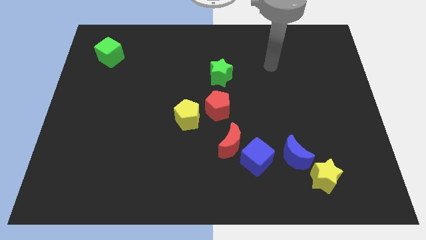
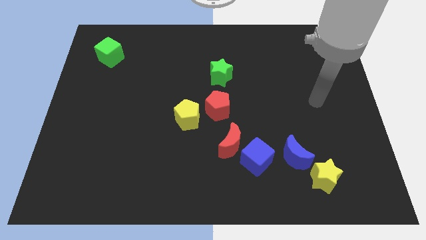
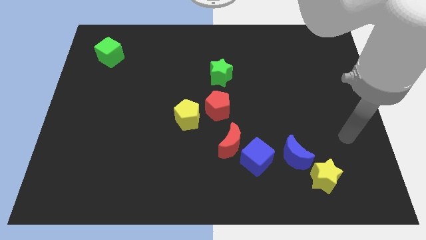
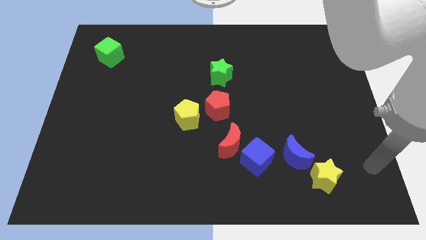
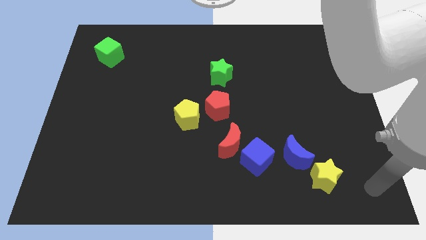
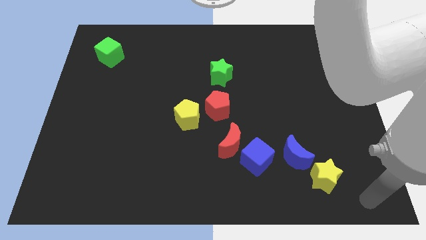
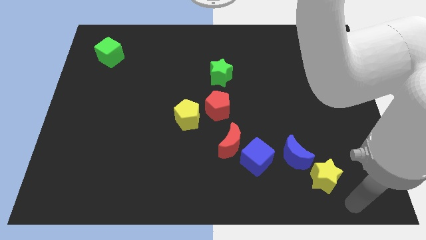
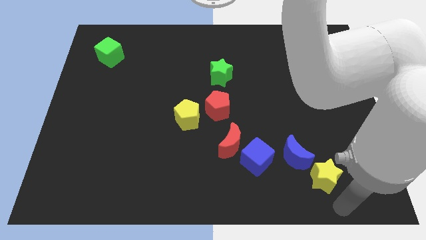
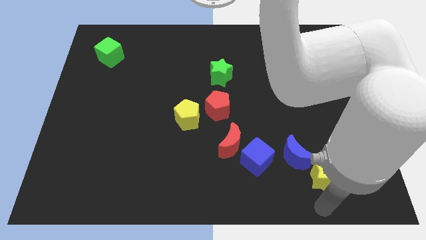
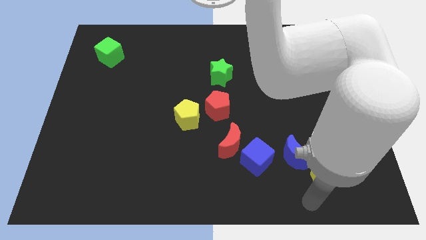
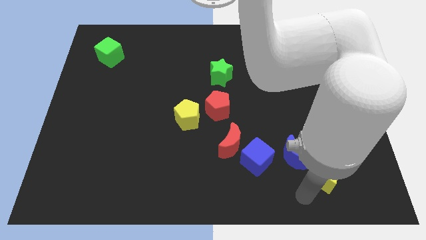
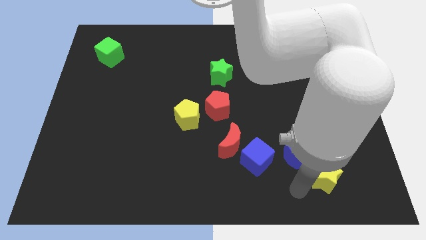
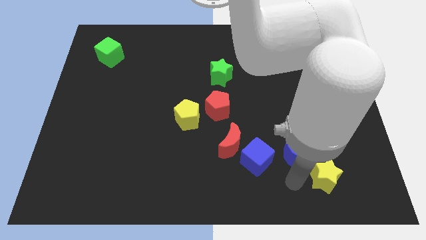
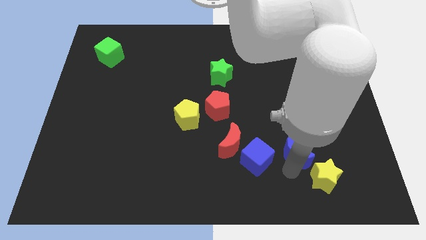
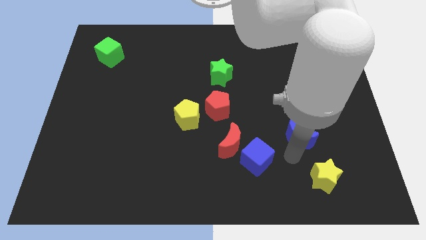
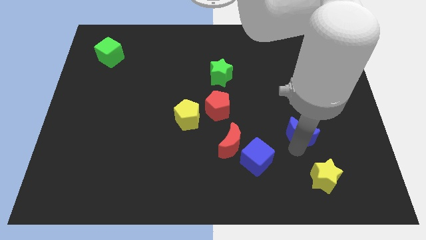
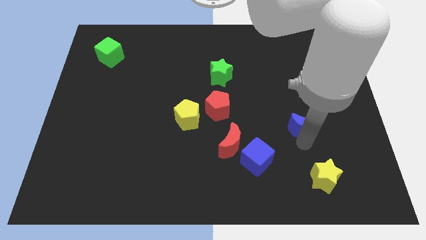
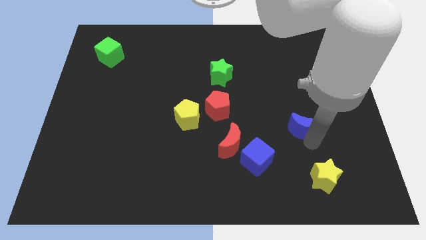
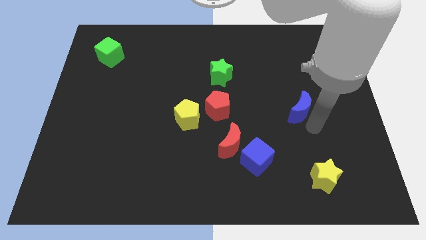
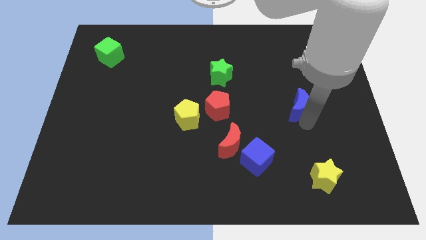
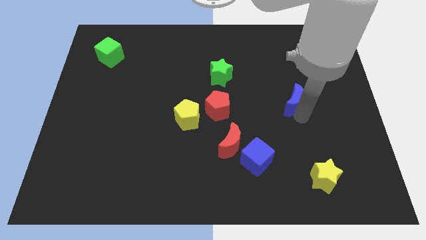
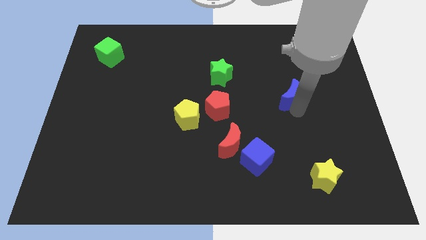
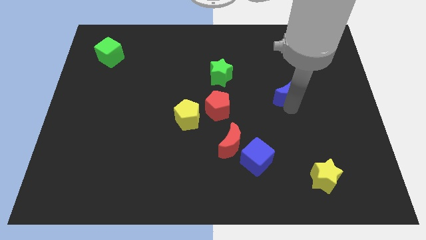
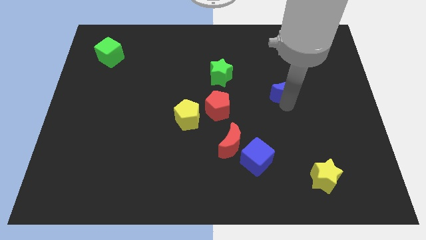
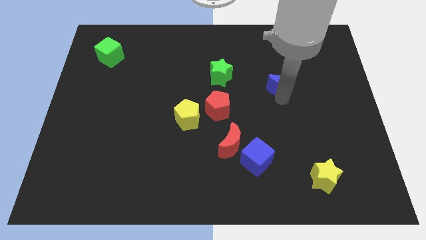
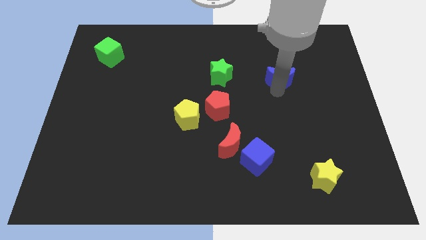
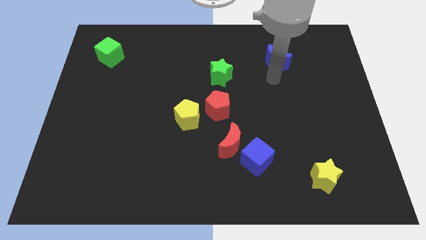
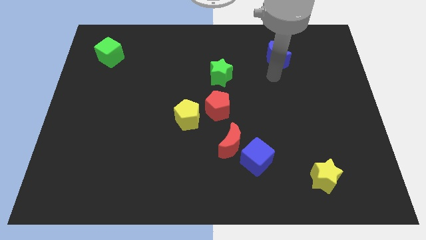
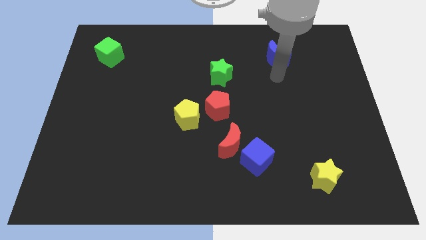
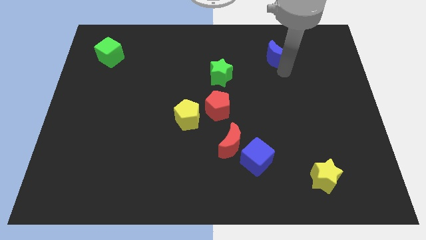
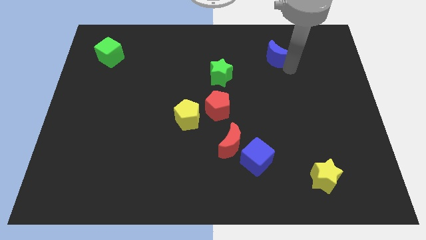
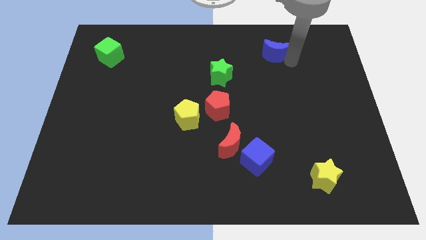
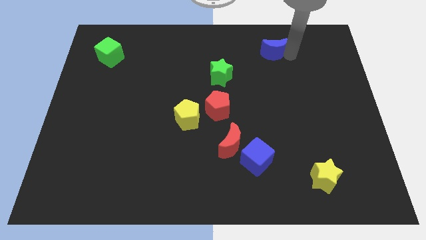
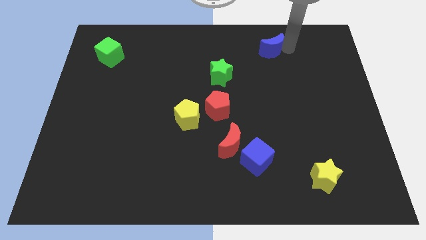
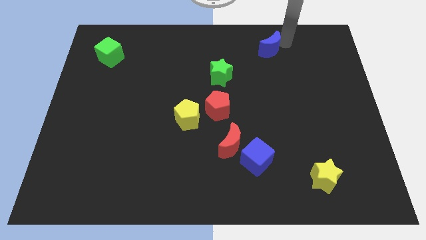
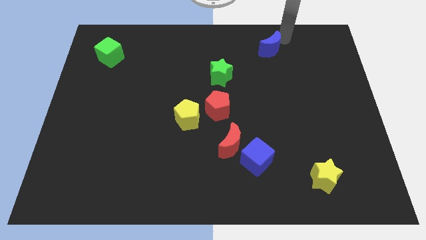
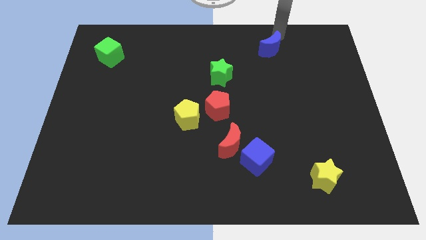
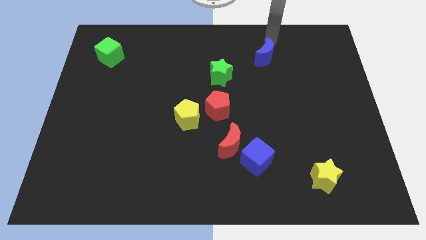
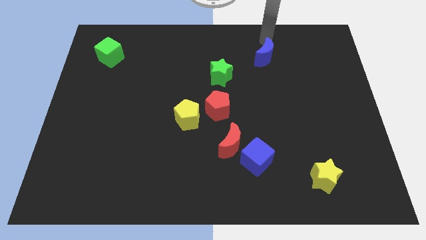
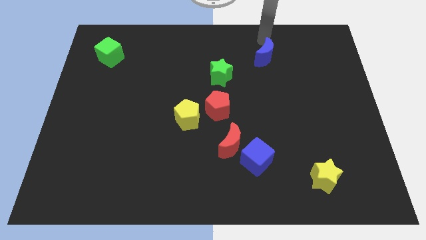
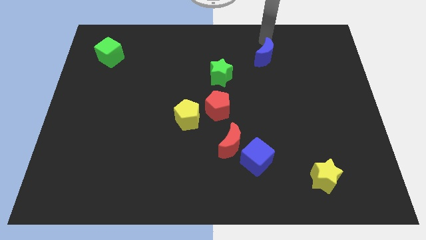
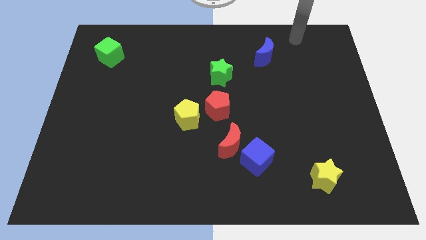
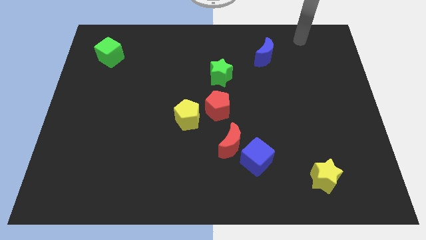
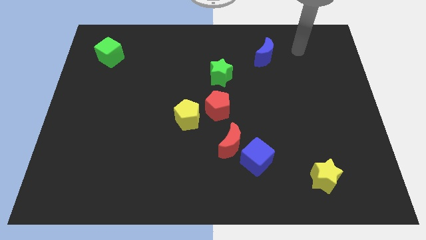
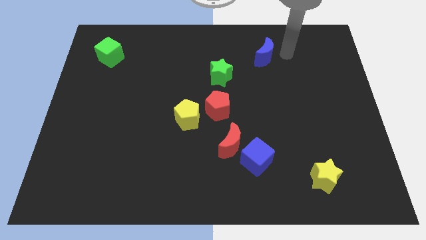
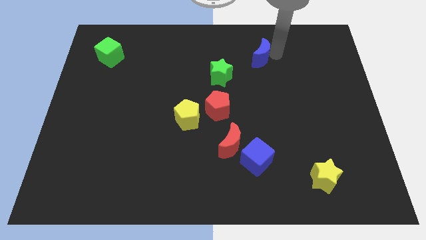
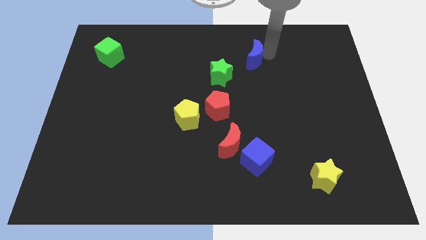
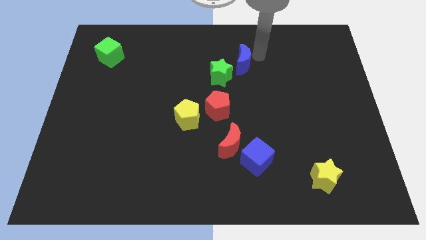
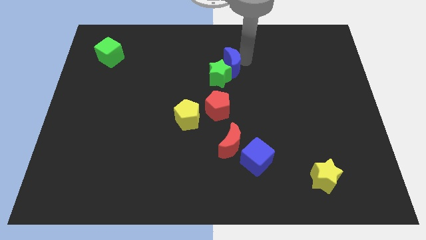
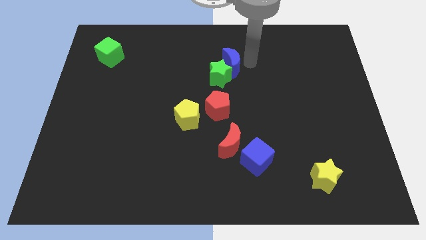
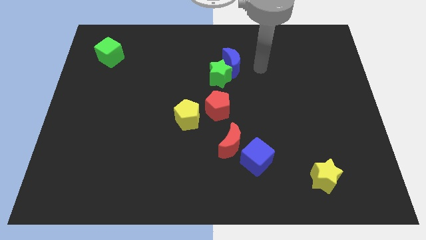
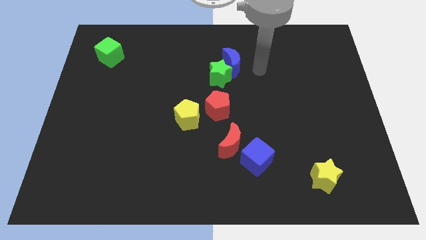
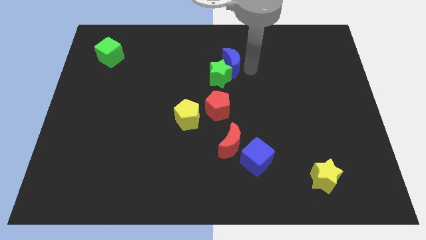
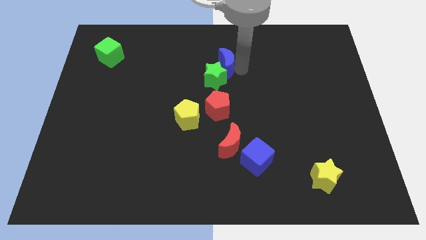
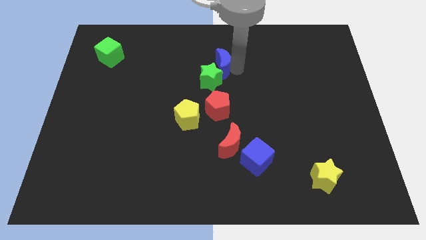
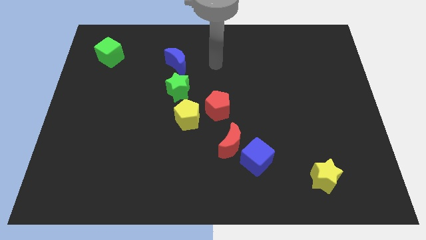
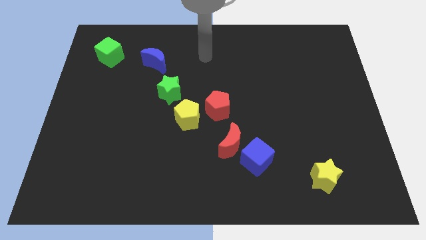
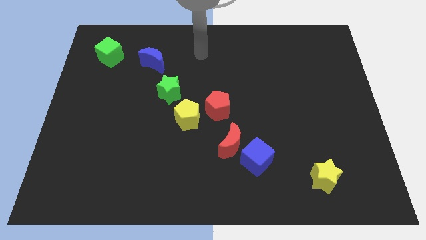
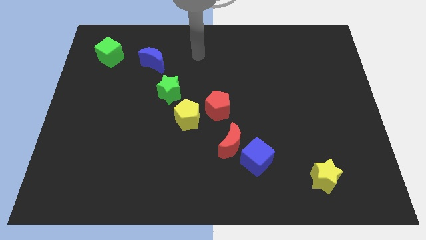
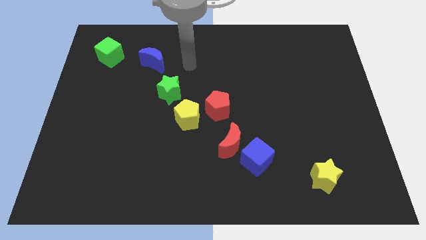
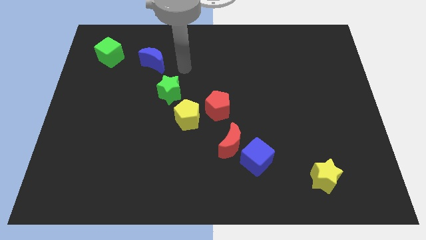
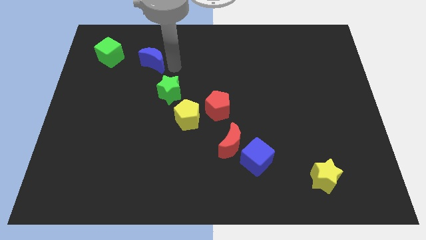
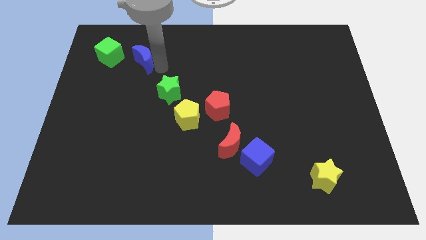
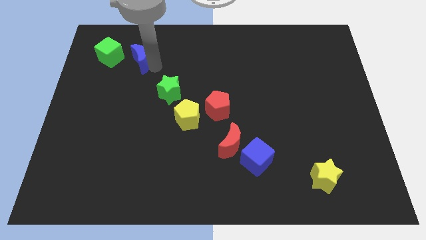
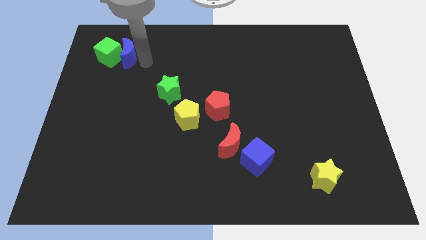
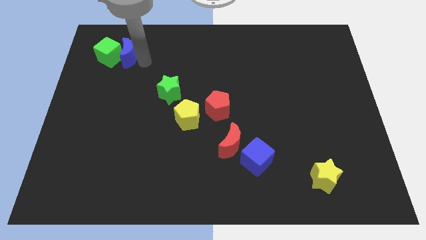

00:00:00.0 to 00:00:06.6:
slide the blue moon close to the green cube

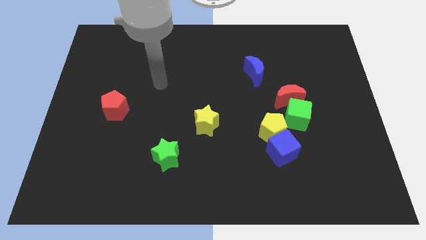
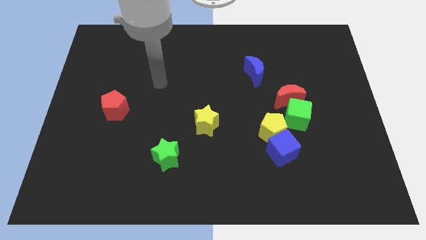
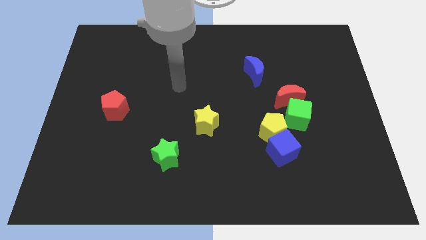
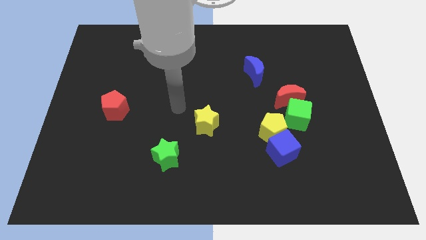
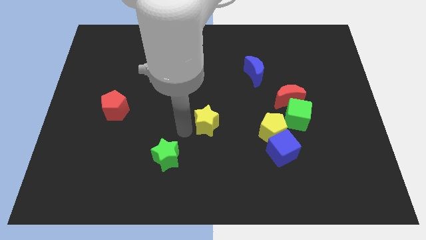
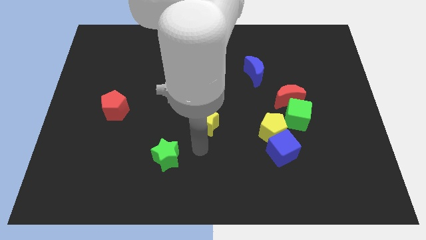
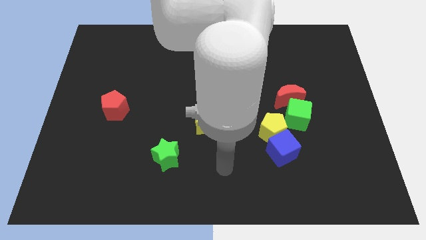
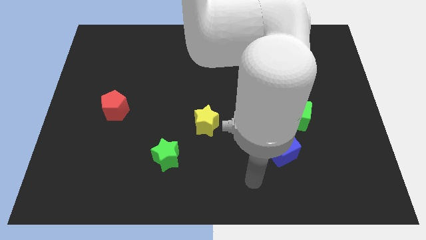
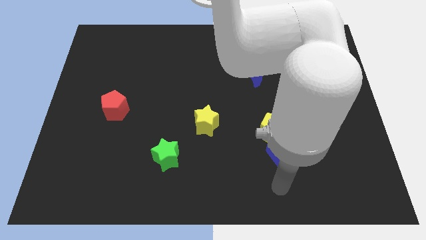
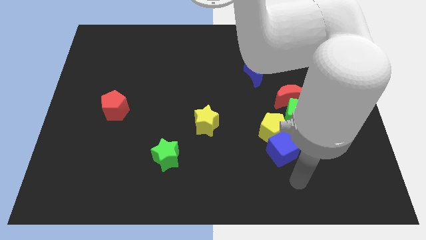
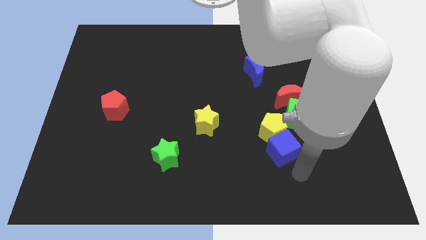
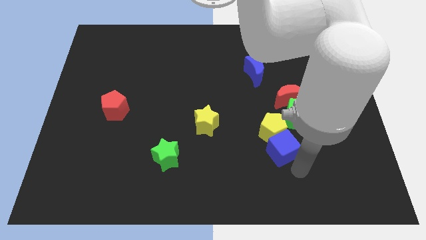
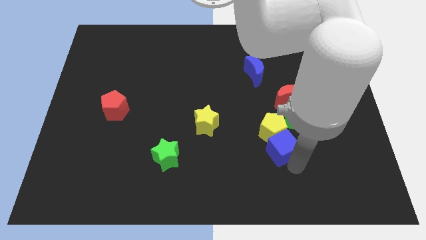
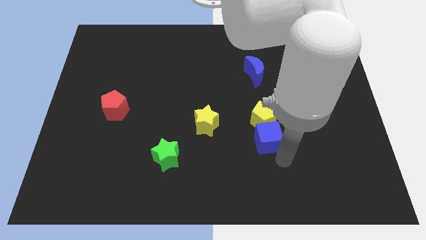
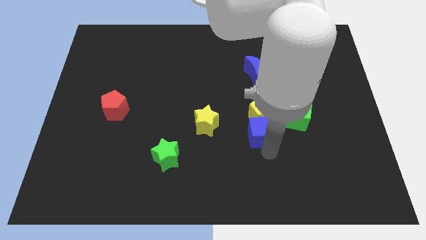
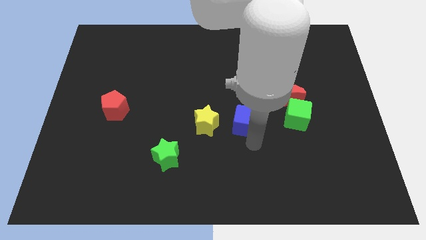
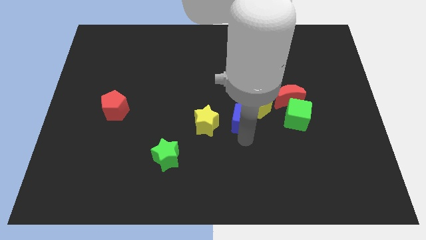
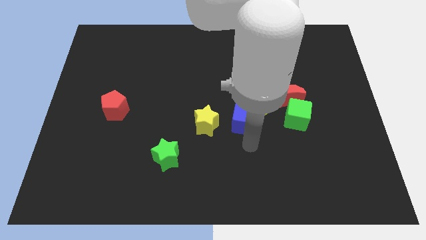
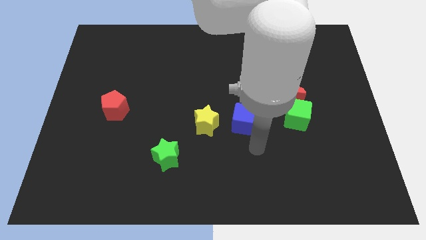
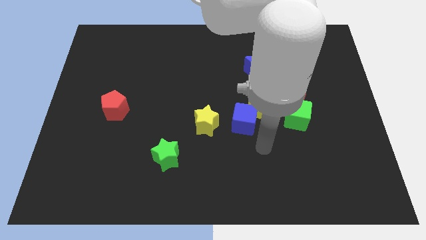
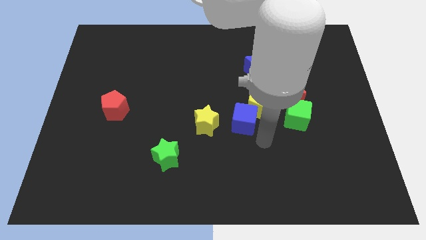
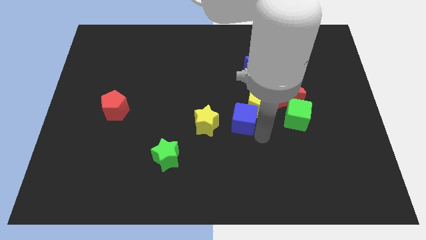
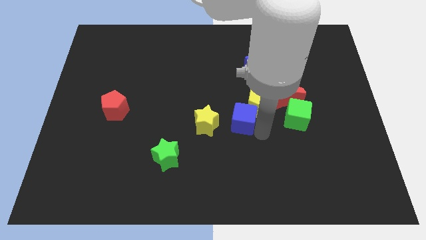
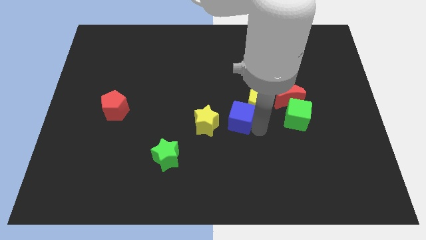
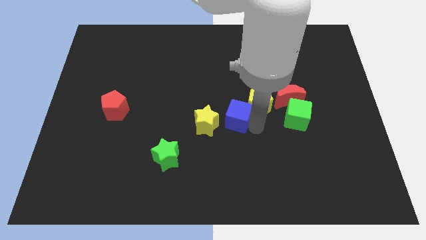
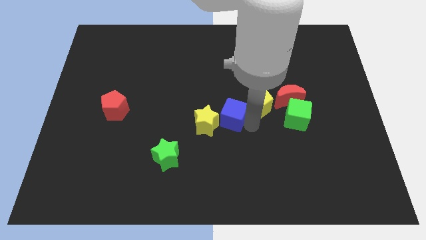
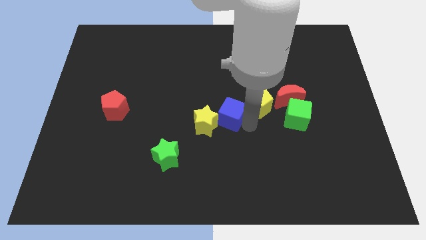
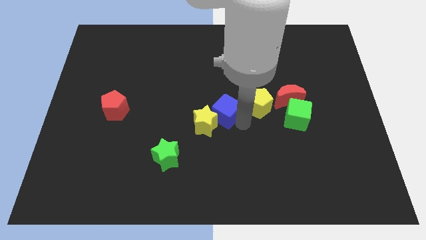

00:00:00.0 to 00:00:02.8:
push the blue cube close to the yellow star
